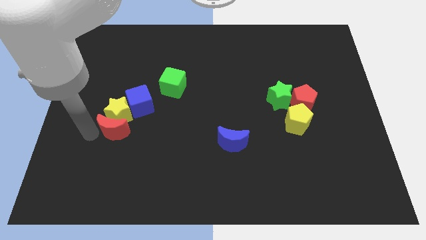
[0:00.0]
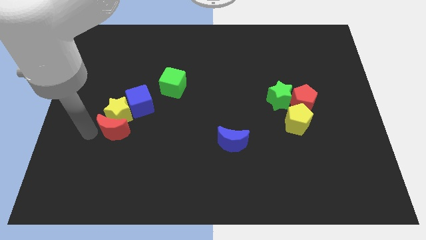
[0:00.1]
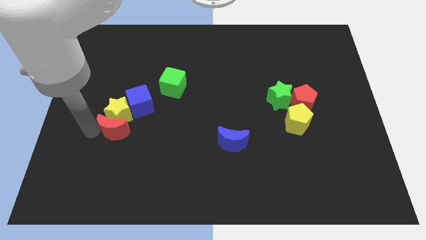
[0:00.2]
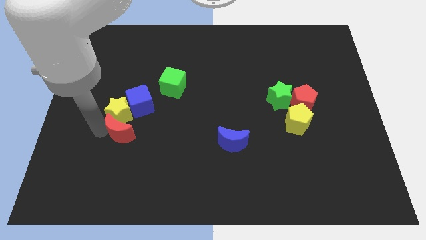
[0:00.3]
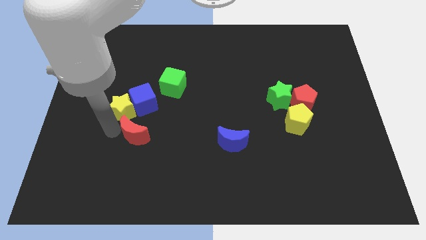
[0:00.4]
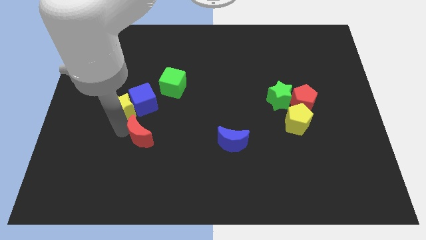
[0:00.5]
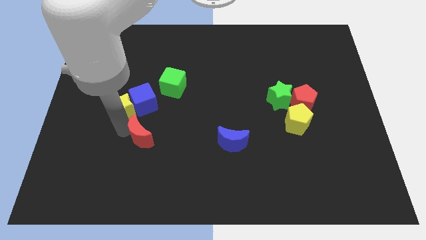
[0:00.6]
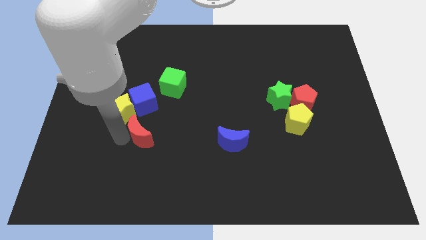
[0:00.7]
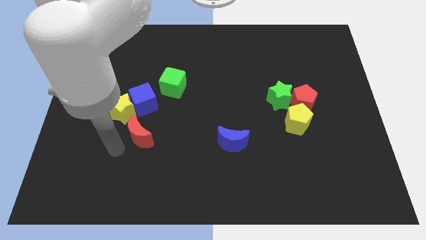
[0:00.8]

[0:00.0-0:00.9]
move the red moon below to the yellow star

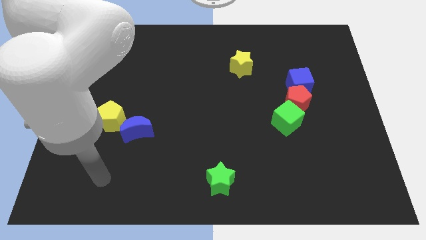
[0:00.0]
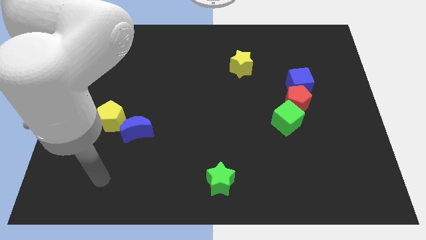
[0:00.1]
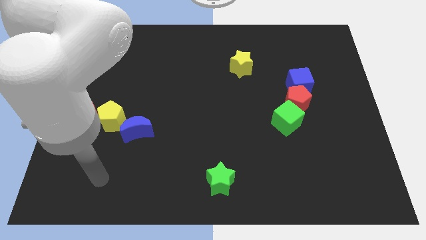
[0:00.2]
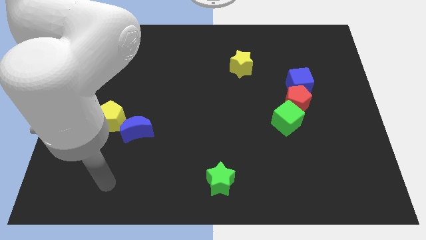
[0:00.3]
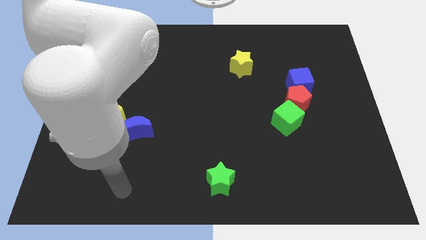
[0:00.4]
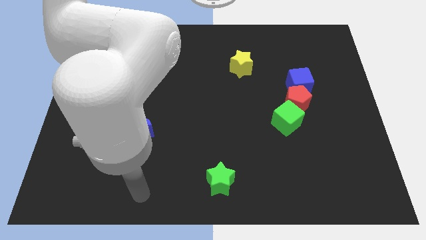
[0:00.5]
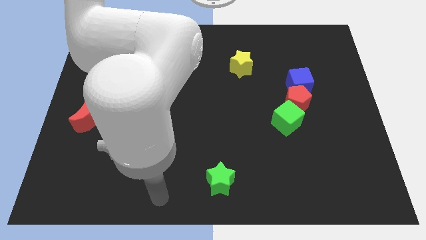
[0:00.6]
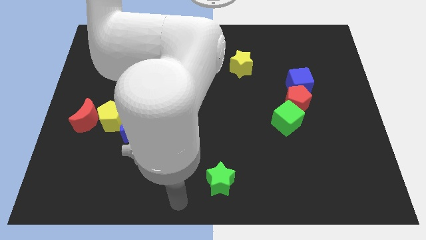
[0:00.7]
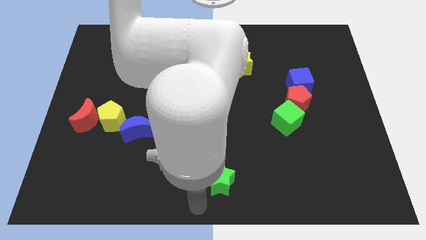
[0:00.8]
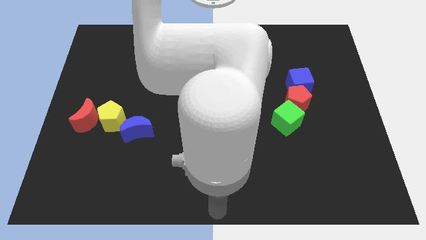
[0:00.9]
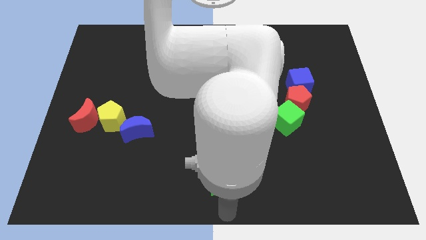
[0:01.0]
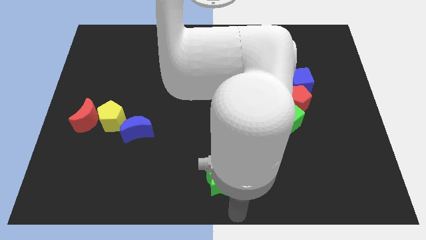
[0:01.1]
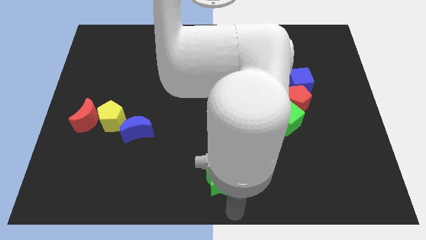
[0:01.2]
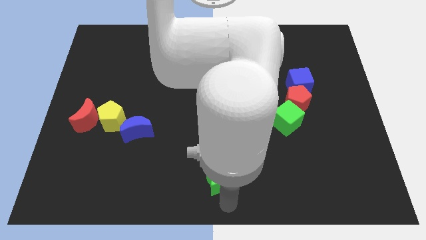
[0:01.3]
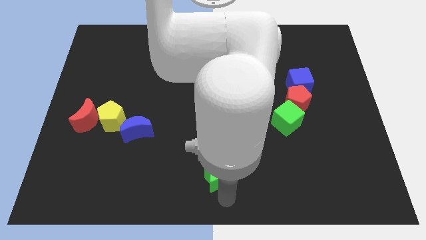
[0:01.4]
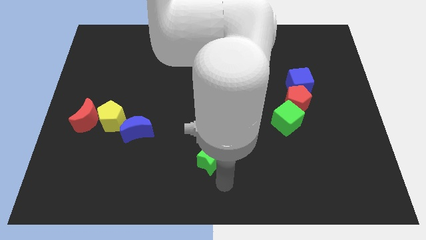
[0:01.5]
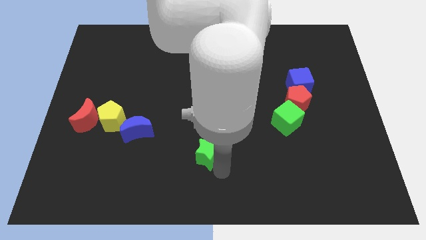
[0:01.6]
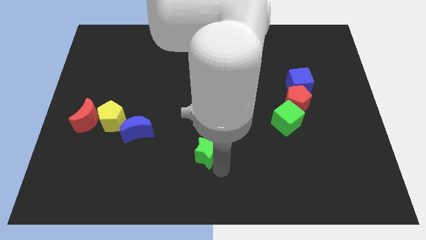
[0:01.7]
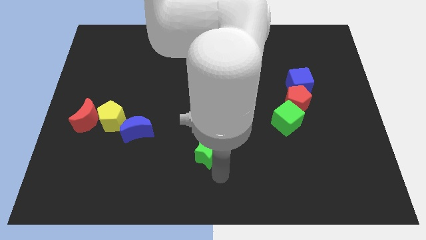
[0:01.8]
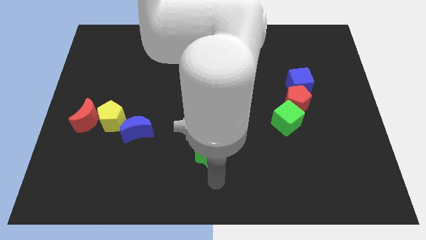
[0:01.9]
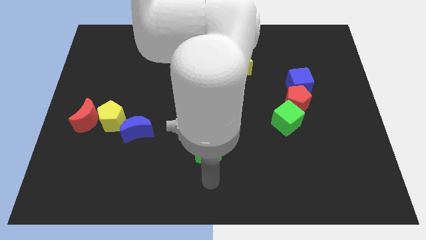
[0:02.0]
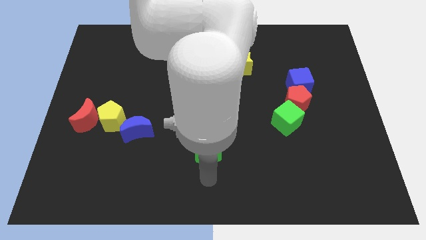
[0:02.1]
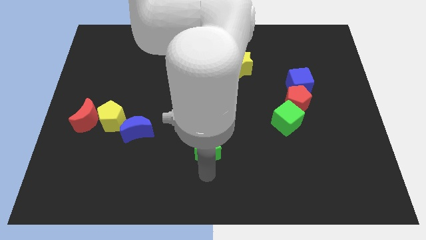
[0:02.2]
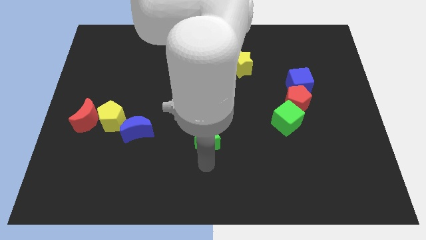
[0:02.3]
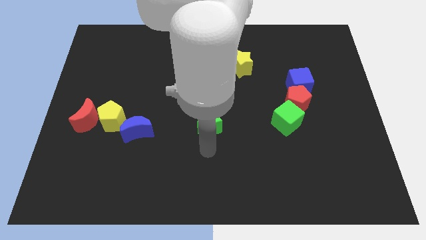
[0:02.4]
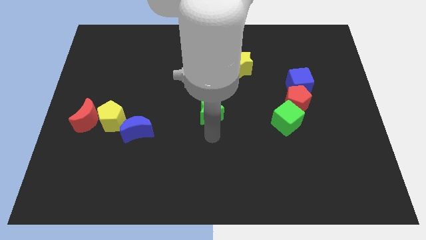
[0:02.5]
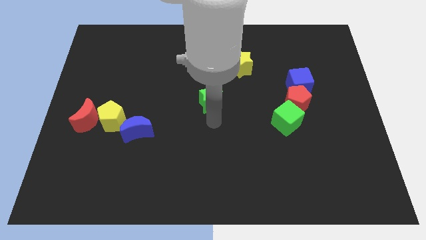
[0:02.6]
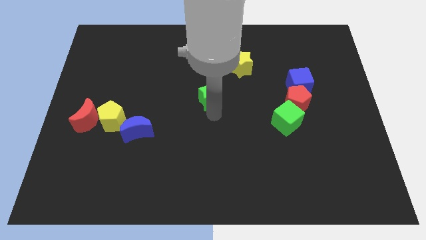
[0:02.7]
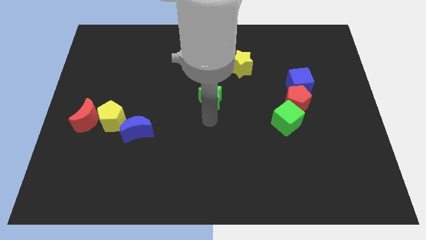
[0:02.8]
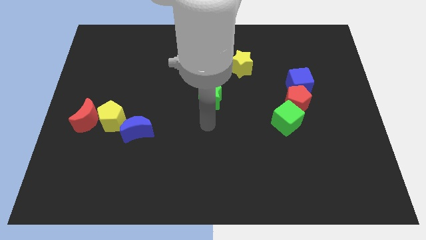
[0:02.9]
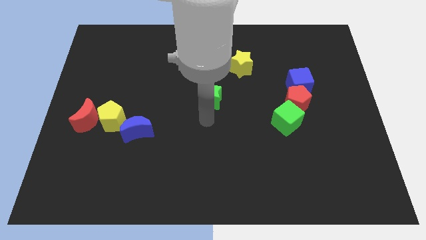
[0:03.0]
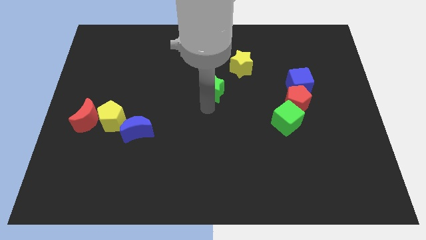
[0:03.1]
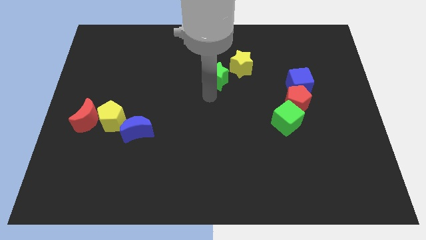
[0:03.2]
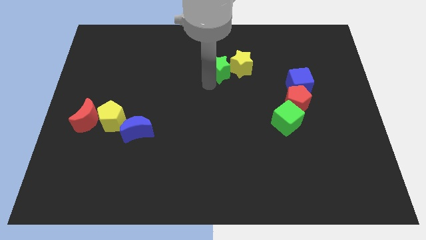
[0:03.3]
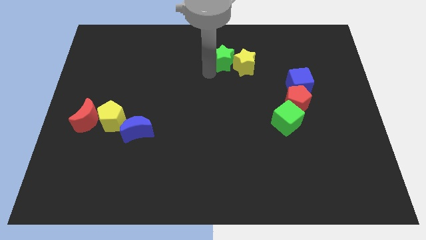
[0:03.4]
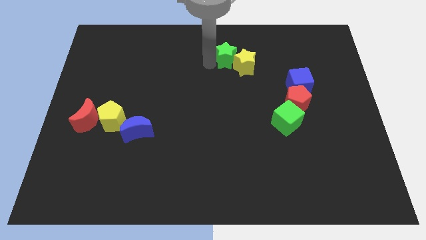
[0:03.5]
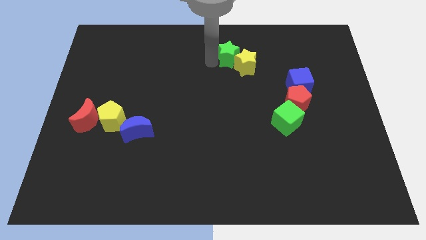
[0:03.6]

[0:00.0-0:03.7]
drag the green star into the left side of the yellow star

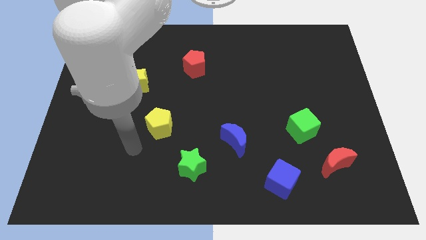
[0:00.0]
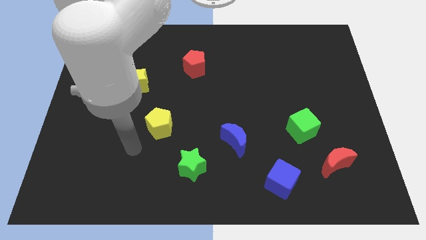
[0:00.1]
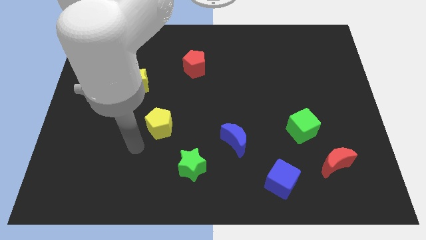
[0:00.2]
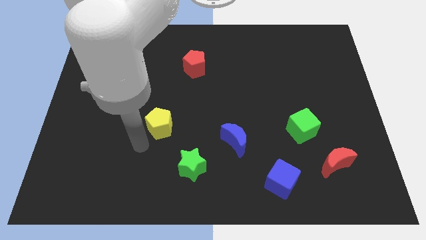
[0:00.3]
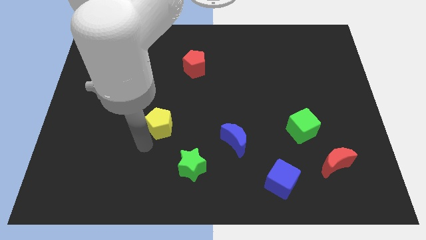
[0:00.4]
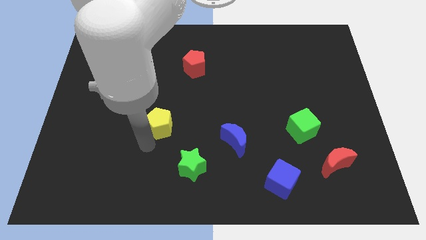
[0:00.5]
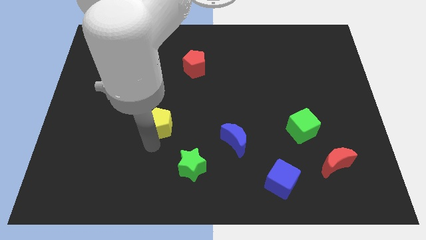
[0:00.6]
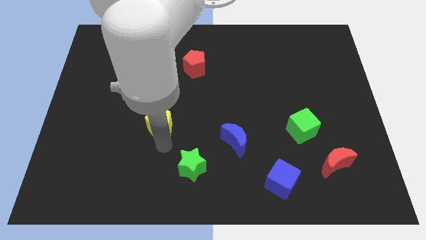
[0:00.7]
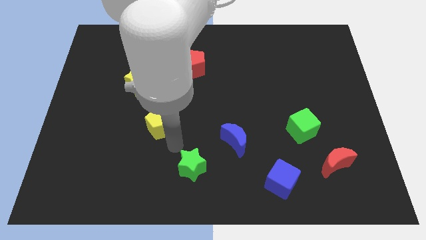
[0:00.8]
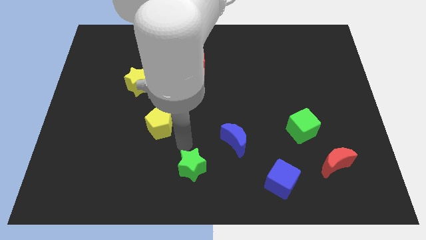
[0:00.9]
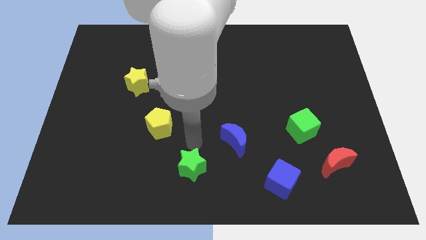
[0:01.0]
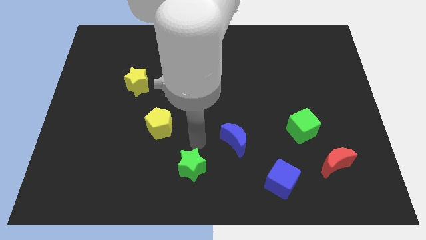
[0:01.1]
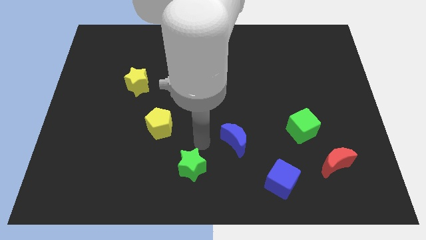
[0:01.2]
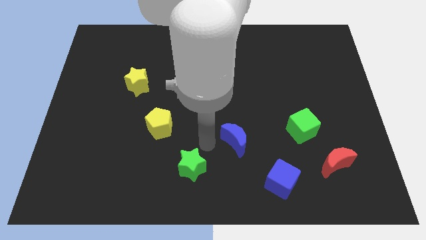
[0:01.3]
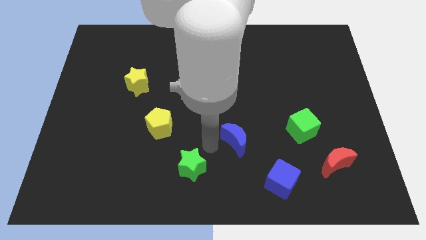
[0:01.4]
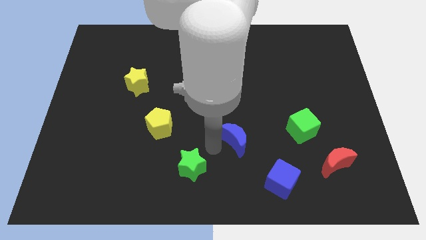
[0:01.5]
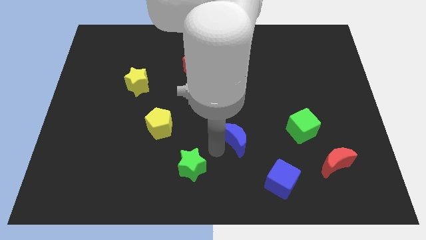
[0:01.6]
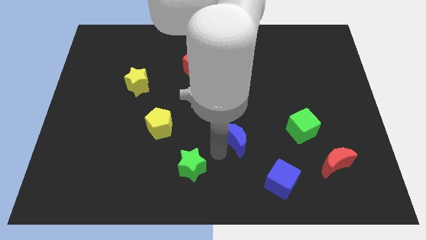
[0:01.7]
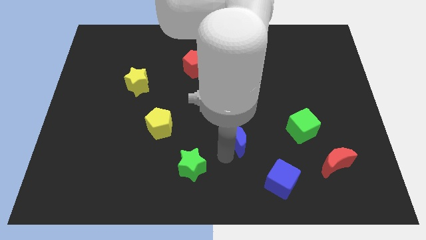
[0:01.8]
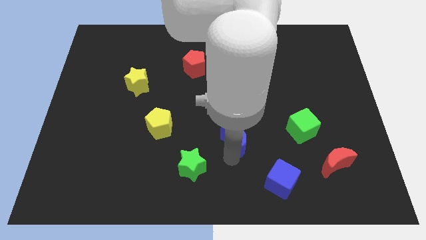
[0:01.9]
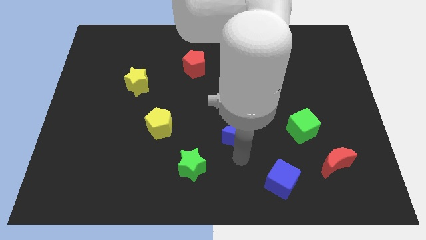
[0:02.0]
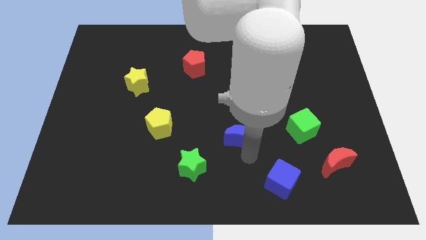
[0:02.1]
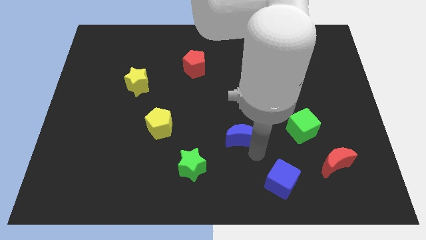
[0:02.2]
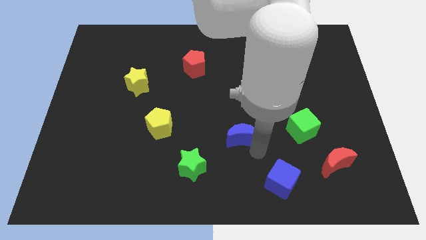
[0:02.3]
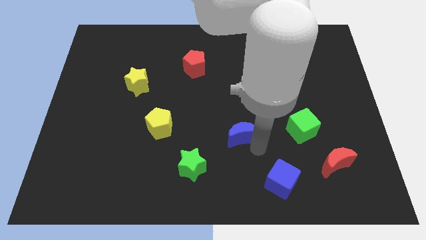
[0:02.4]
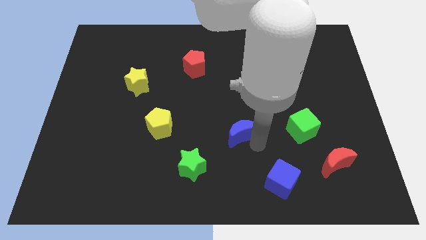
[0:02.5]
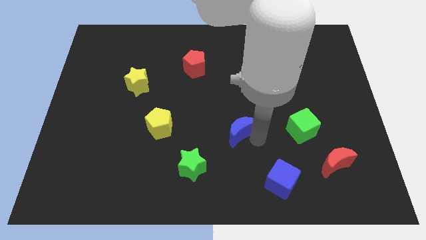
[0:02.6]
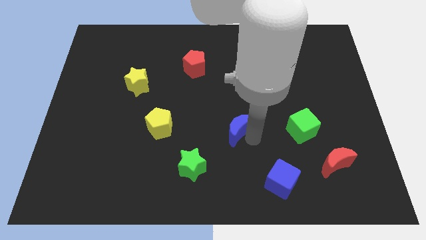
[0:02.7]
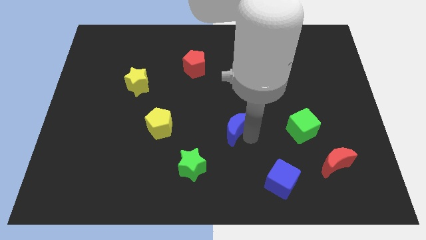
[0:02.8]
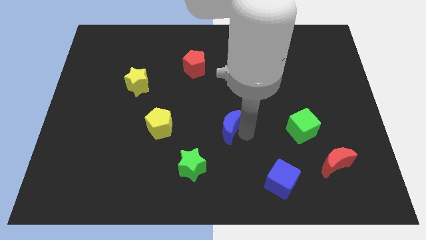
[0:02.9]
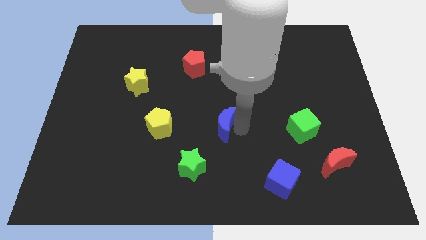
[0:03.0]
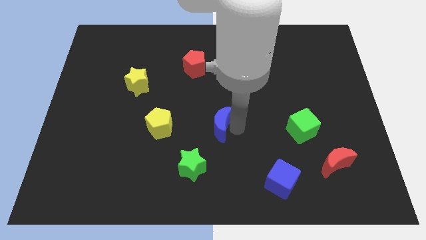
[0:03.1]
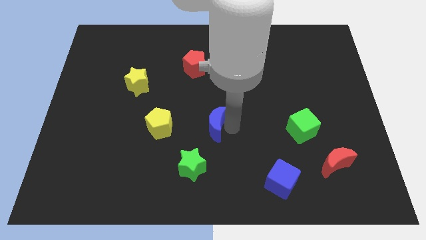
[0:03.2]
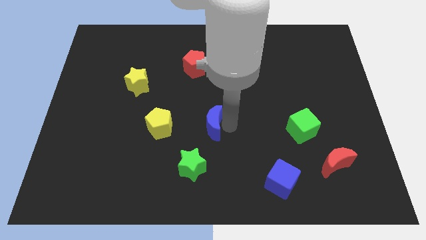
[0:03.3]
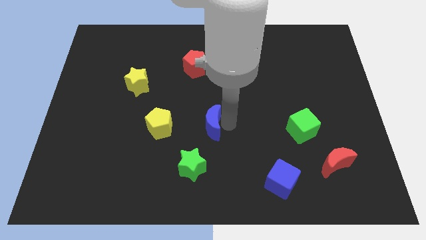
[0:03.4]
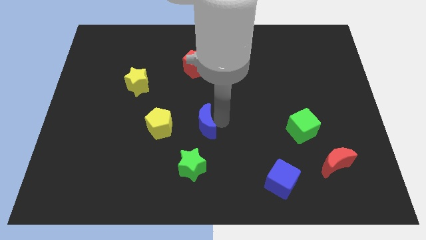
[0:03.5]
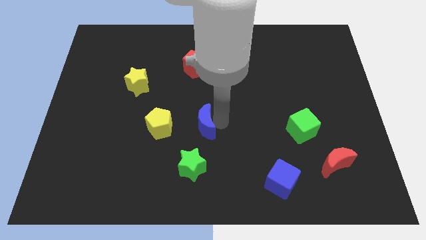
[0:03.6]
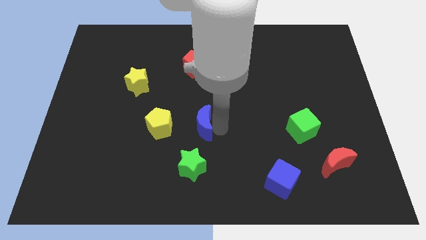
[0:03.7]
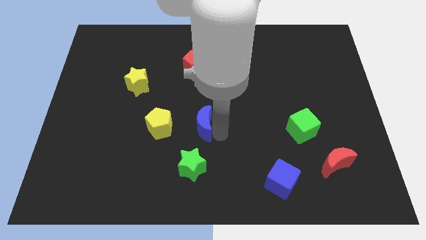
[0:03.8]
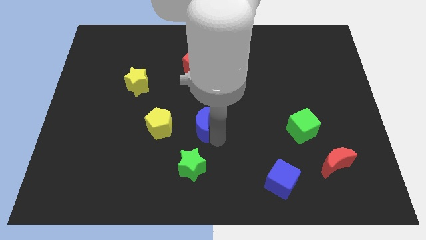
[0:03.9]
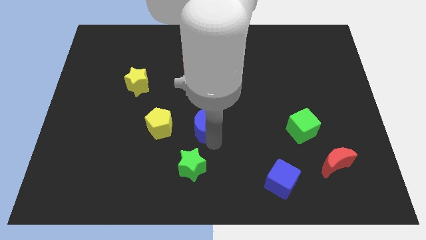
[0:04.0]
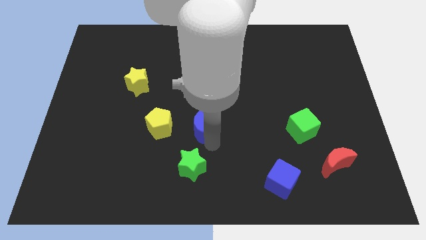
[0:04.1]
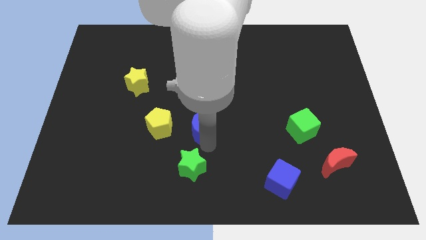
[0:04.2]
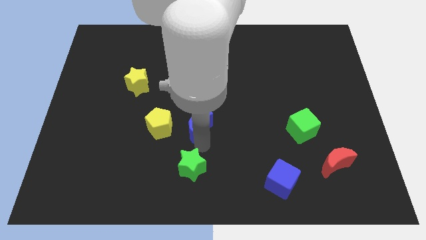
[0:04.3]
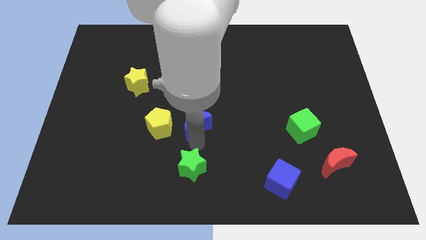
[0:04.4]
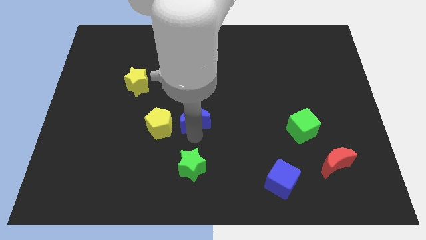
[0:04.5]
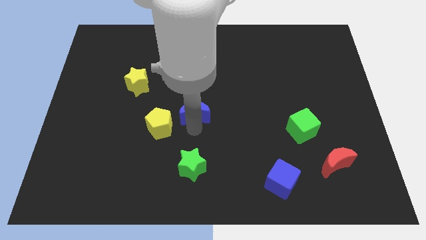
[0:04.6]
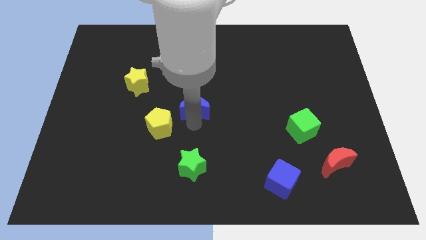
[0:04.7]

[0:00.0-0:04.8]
push the blue crescent towards the yellow pentagon
